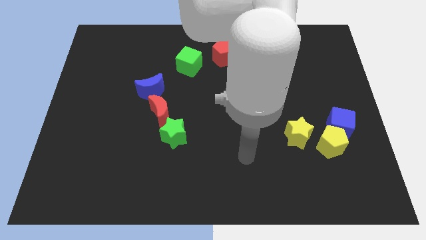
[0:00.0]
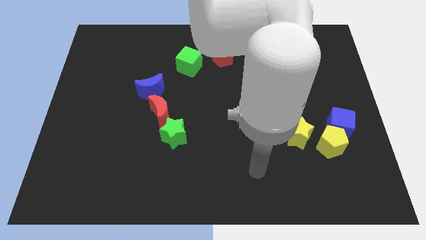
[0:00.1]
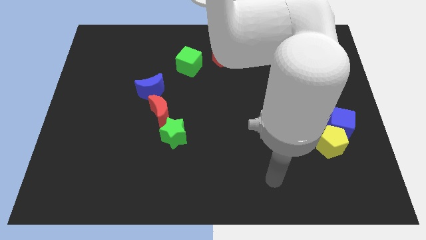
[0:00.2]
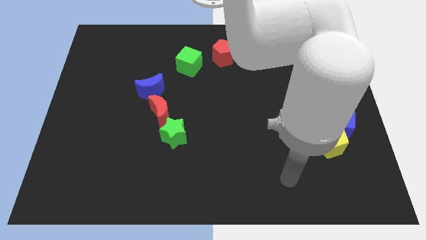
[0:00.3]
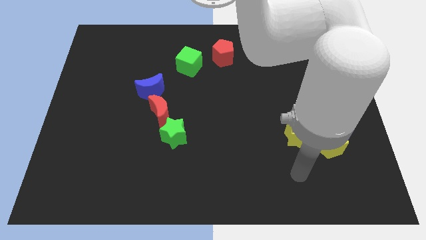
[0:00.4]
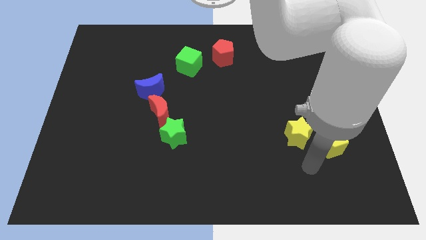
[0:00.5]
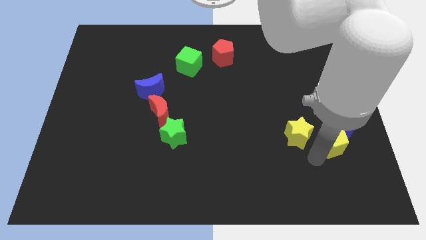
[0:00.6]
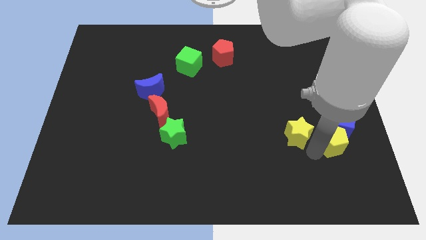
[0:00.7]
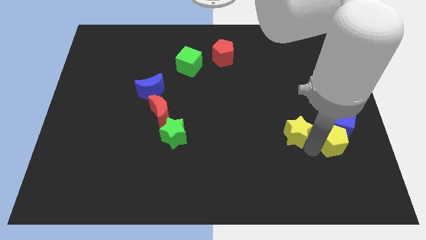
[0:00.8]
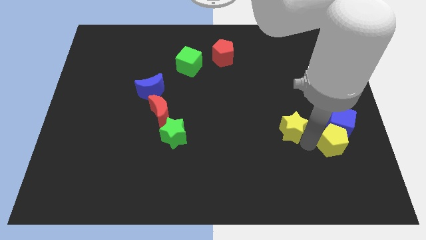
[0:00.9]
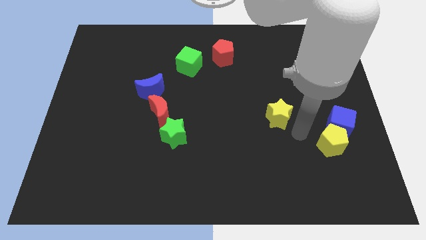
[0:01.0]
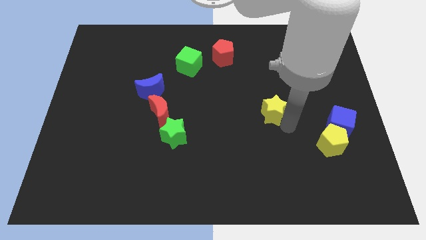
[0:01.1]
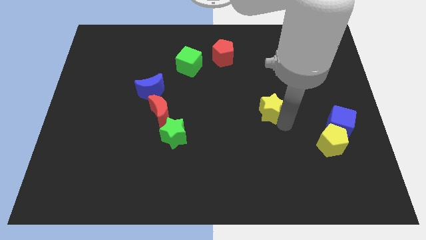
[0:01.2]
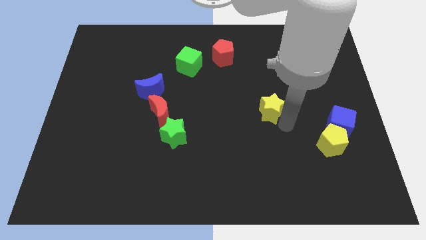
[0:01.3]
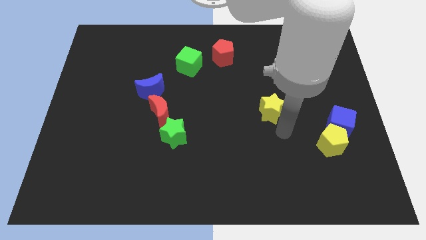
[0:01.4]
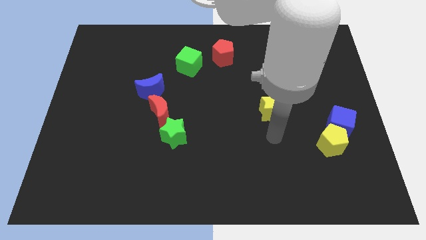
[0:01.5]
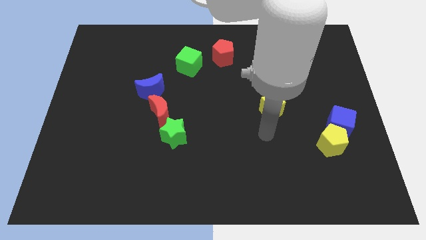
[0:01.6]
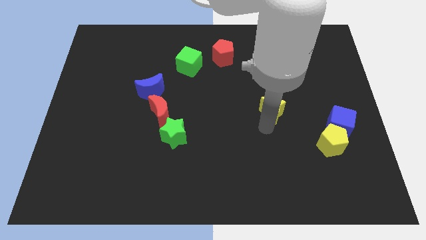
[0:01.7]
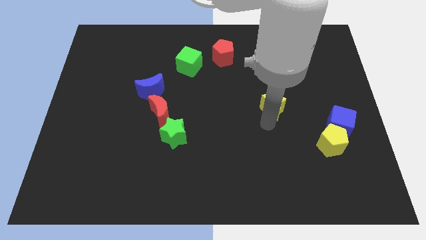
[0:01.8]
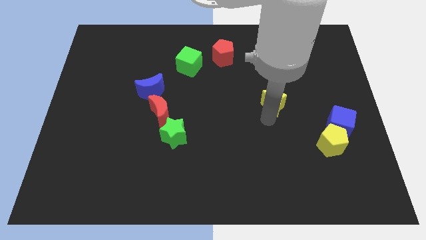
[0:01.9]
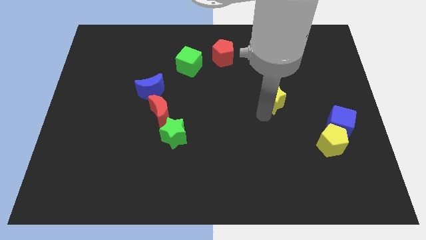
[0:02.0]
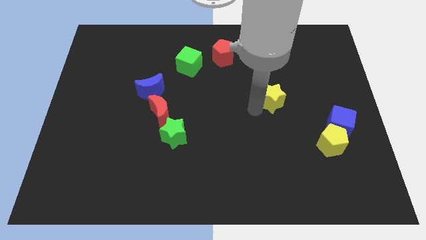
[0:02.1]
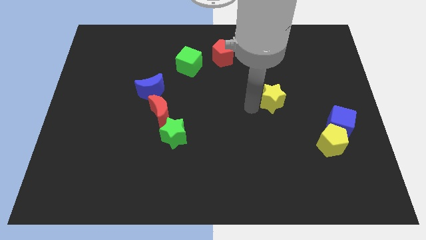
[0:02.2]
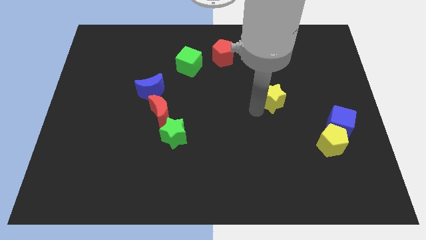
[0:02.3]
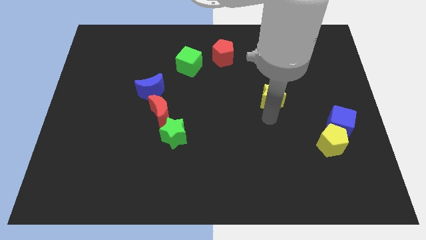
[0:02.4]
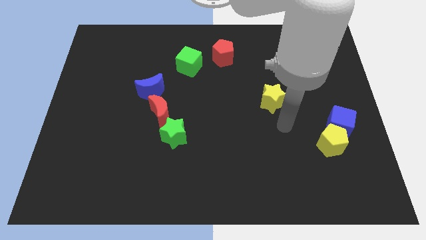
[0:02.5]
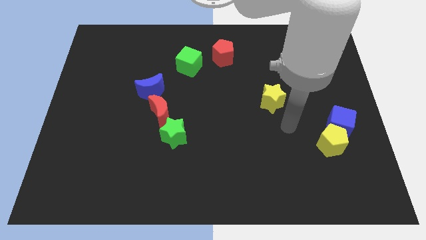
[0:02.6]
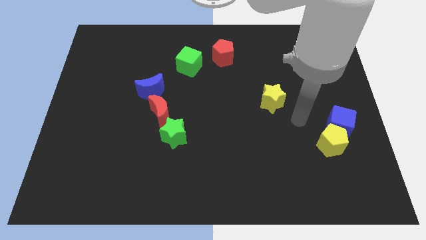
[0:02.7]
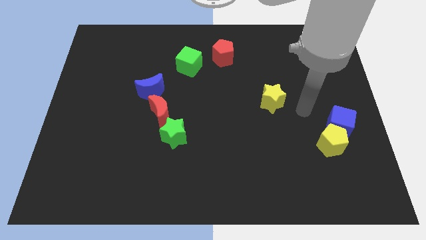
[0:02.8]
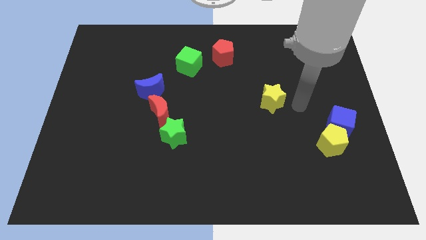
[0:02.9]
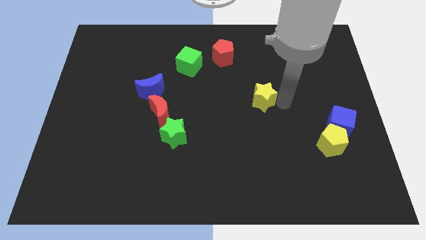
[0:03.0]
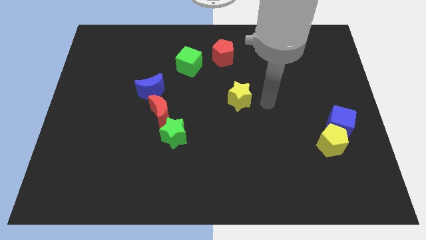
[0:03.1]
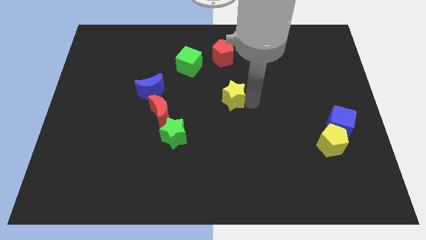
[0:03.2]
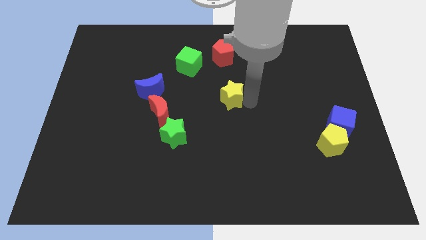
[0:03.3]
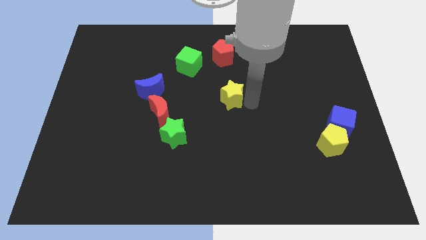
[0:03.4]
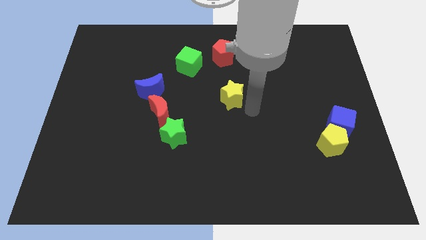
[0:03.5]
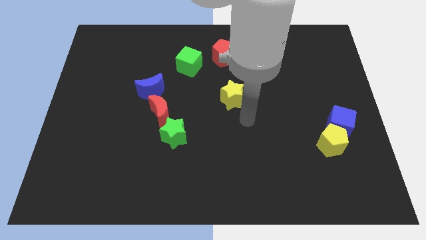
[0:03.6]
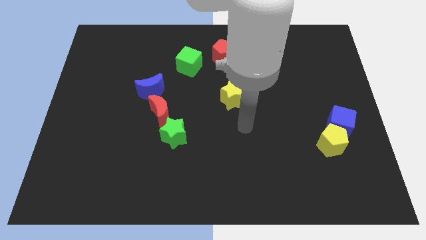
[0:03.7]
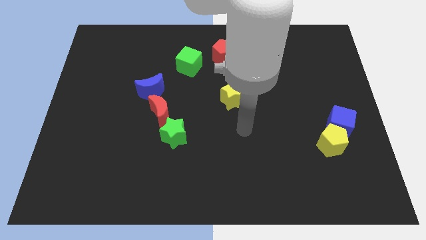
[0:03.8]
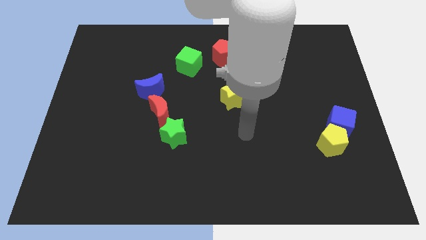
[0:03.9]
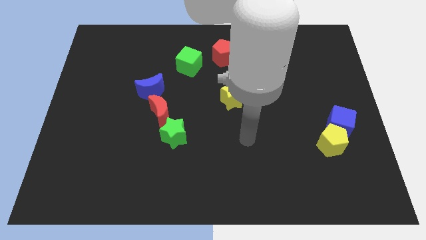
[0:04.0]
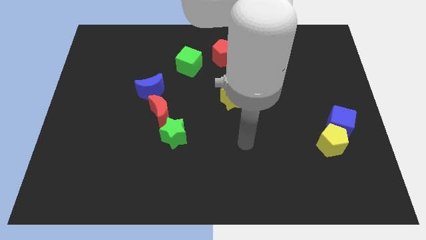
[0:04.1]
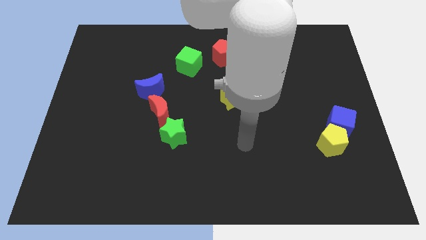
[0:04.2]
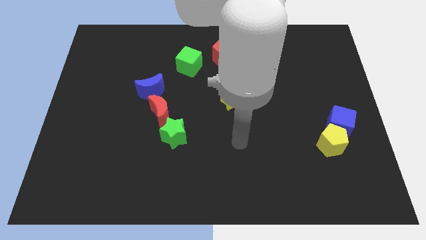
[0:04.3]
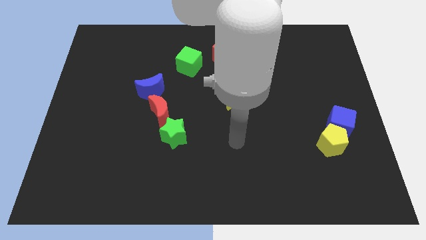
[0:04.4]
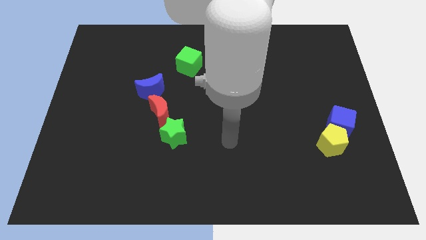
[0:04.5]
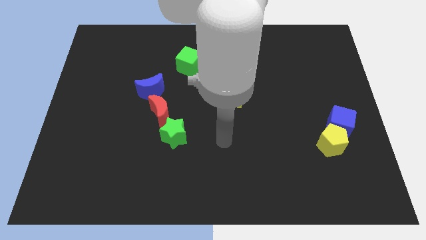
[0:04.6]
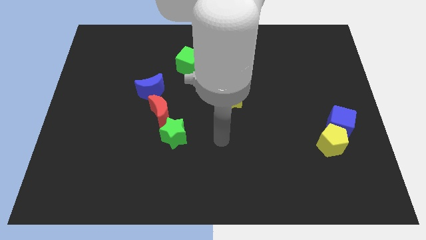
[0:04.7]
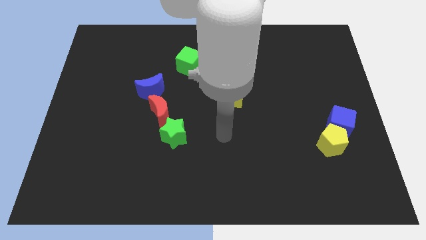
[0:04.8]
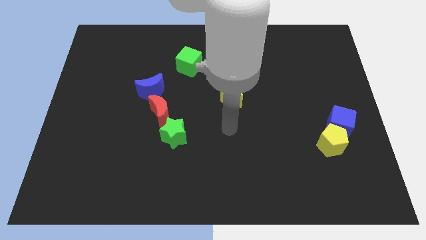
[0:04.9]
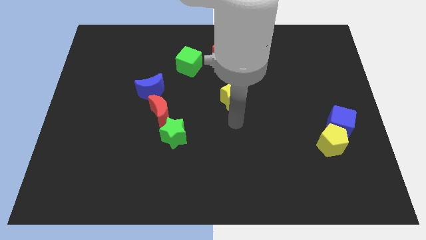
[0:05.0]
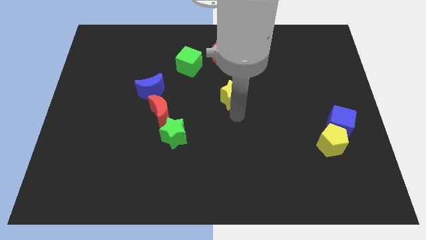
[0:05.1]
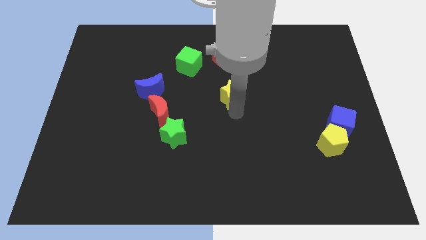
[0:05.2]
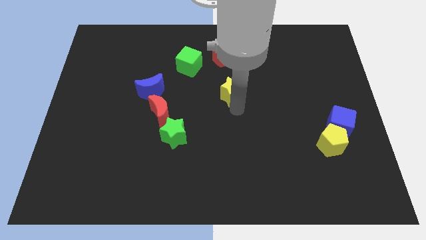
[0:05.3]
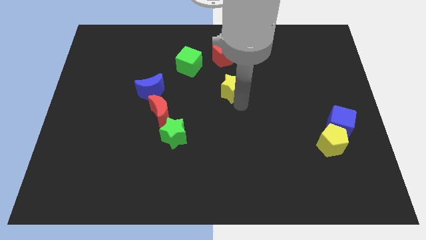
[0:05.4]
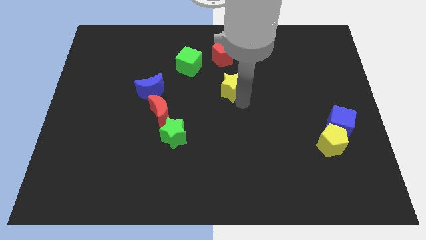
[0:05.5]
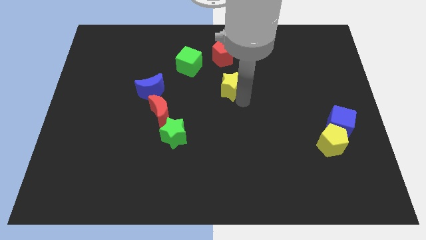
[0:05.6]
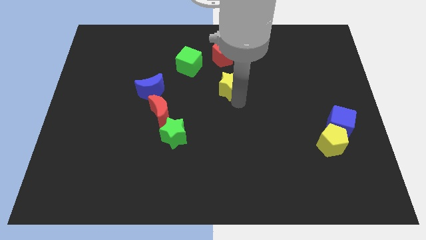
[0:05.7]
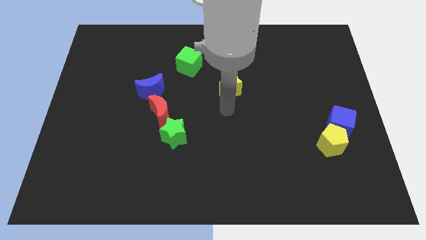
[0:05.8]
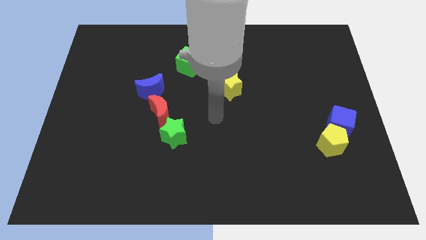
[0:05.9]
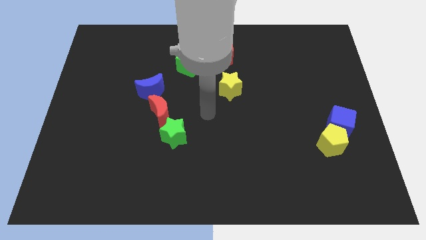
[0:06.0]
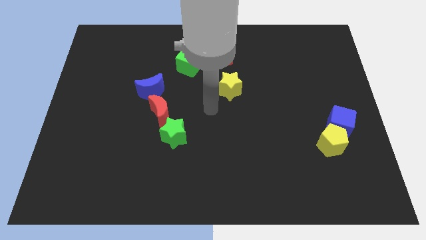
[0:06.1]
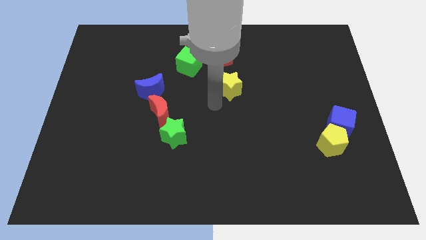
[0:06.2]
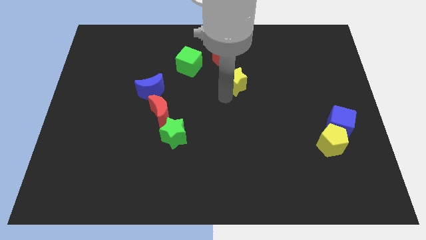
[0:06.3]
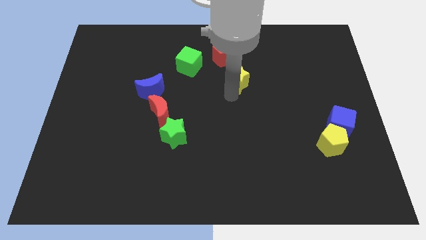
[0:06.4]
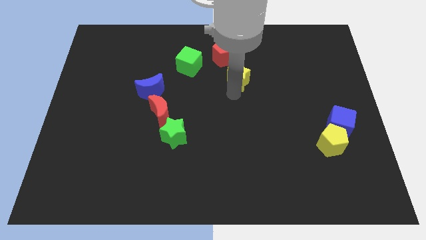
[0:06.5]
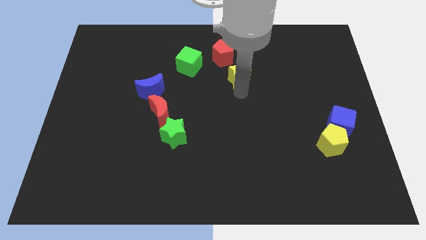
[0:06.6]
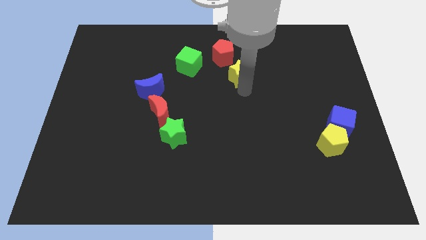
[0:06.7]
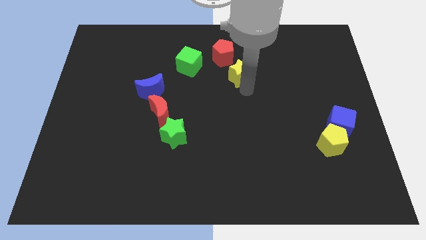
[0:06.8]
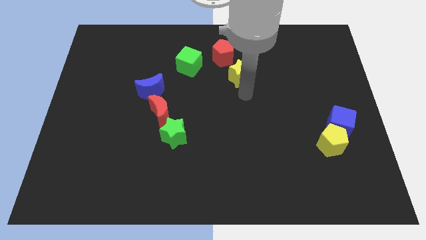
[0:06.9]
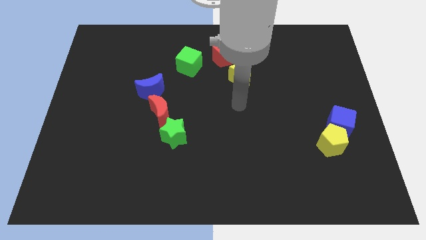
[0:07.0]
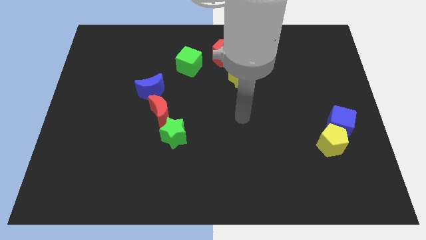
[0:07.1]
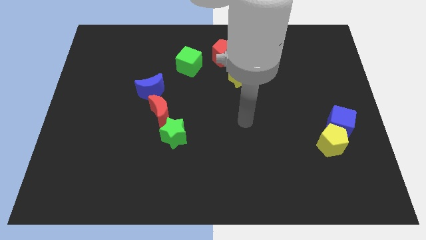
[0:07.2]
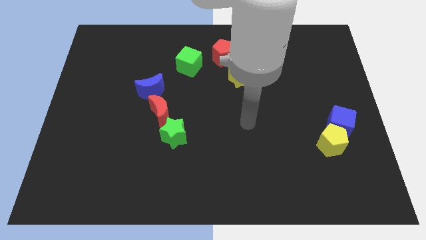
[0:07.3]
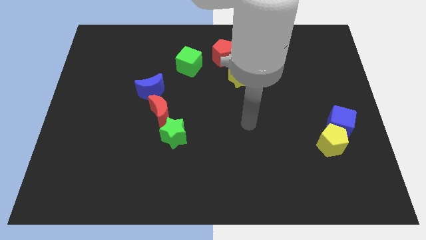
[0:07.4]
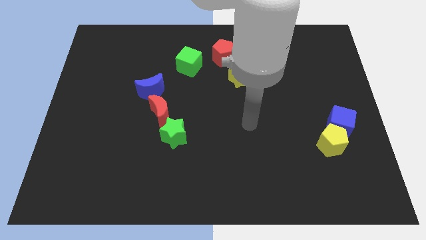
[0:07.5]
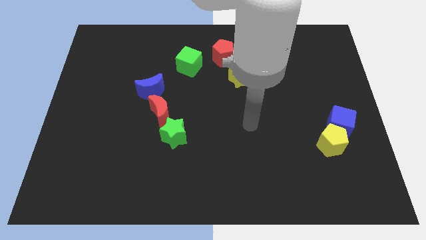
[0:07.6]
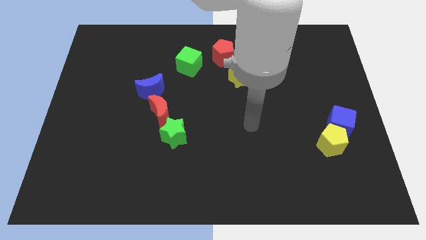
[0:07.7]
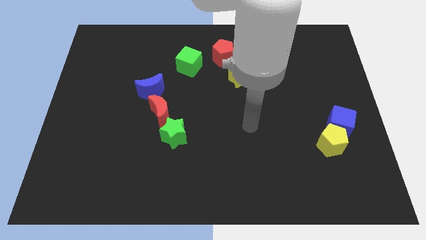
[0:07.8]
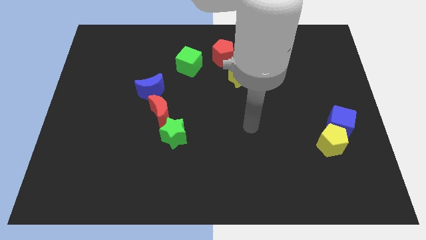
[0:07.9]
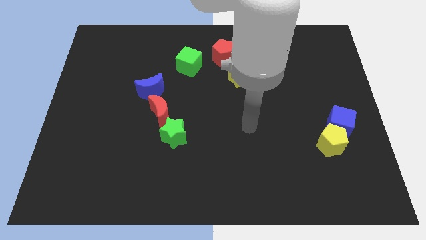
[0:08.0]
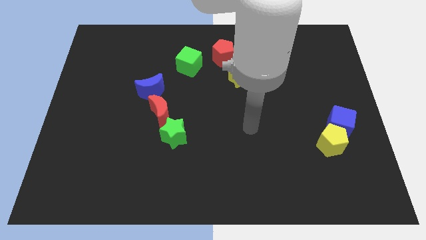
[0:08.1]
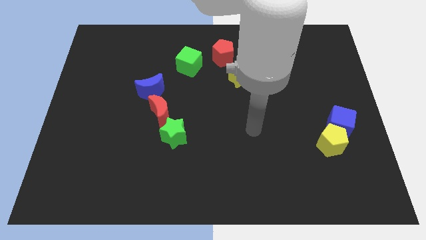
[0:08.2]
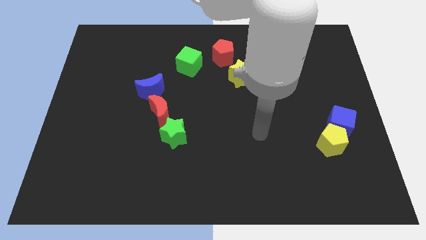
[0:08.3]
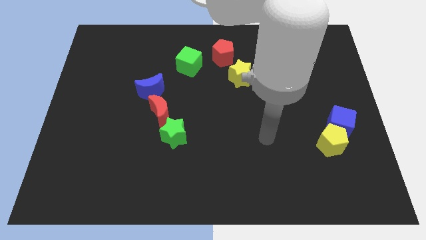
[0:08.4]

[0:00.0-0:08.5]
move the yellow star close to the red pentagon

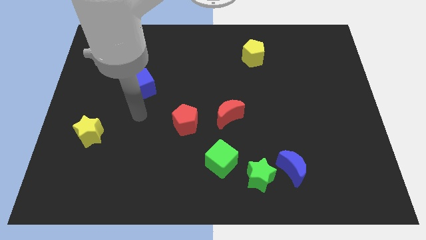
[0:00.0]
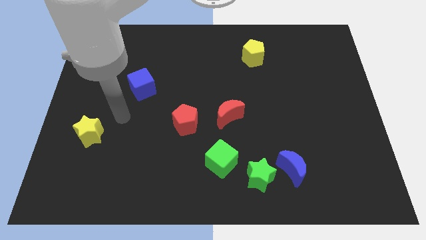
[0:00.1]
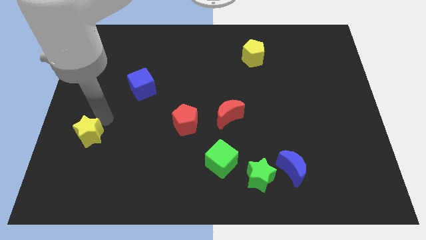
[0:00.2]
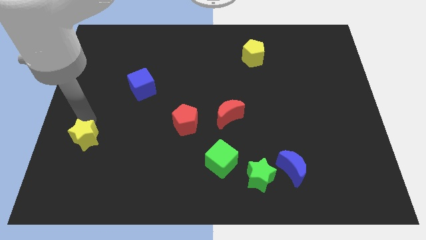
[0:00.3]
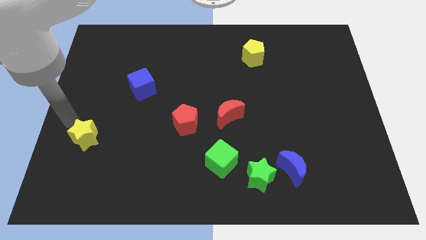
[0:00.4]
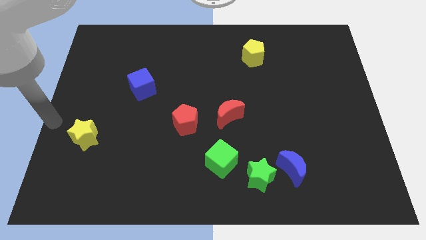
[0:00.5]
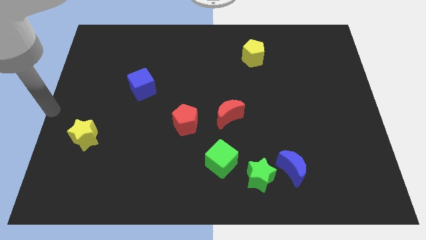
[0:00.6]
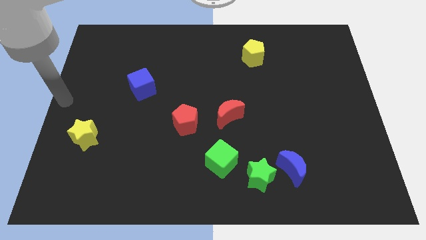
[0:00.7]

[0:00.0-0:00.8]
push the yellow star slightly towards the left
